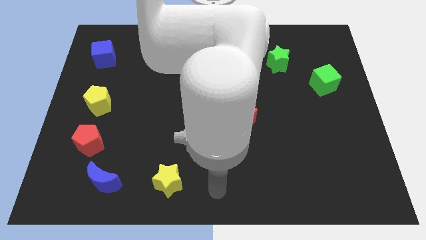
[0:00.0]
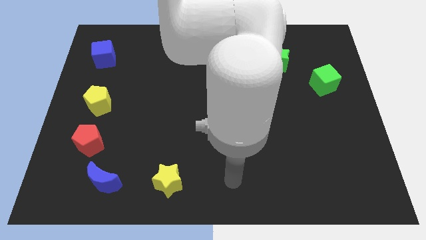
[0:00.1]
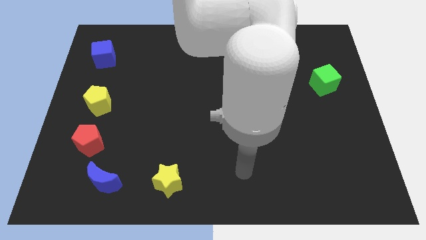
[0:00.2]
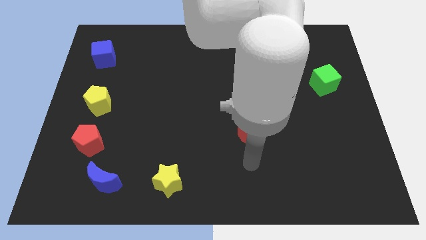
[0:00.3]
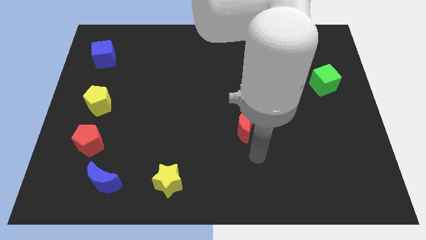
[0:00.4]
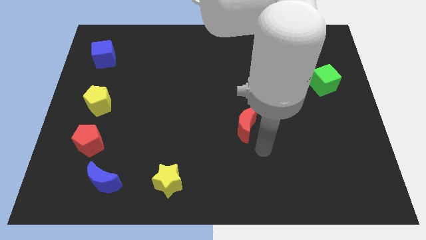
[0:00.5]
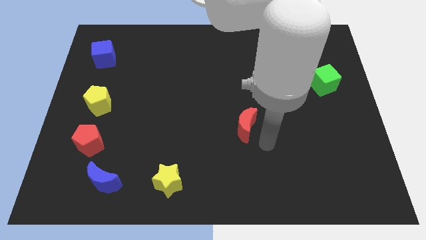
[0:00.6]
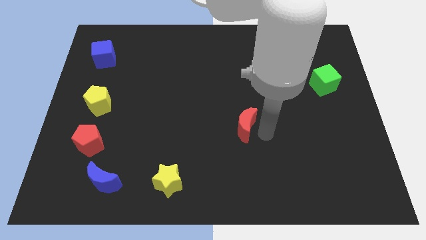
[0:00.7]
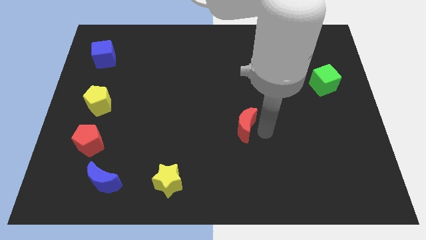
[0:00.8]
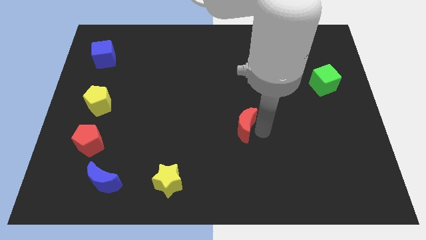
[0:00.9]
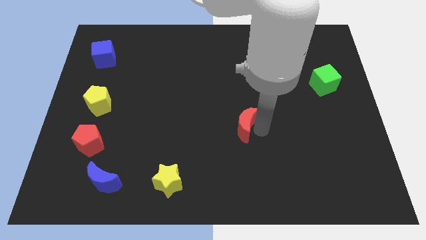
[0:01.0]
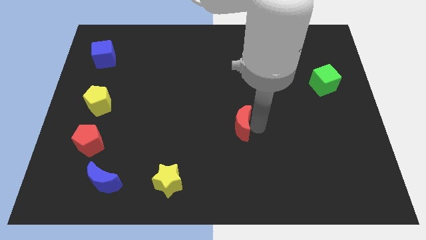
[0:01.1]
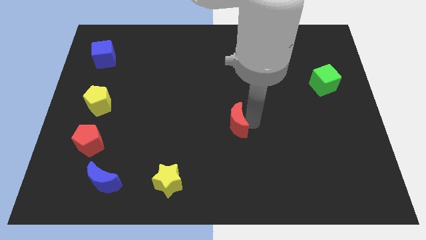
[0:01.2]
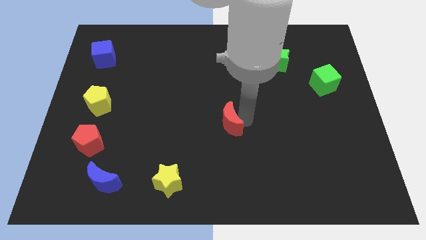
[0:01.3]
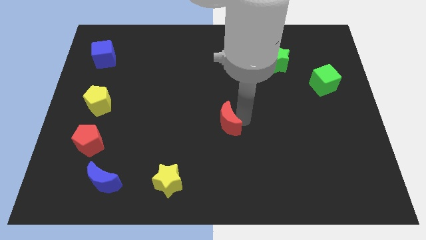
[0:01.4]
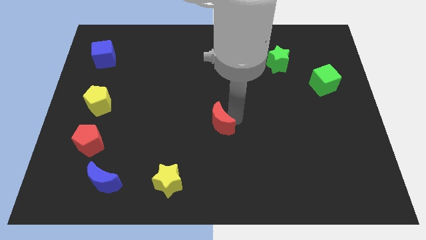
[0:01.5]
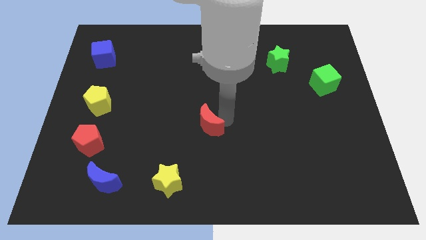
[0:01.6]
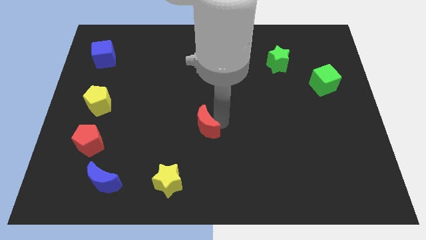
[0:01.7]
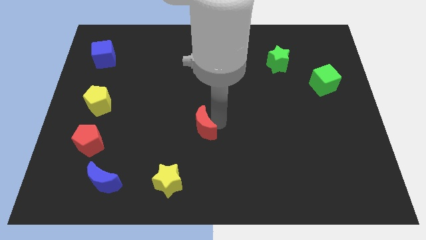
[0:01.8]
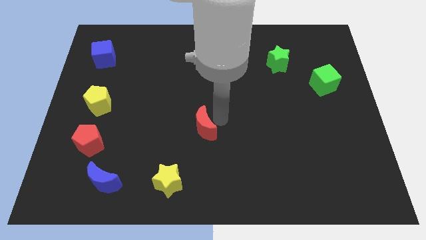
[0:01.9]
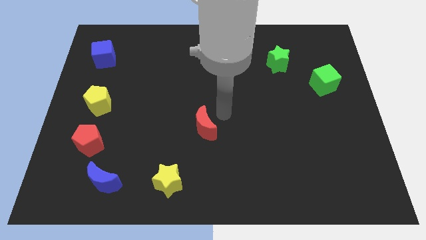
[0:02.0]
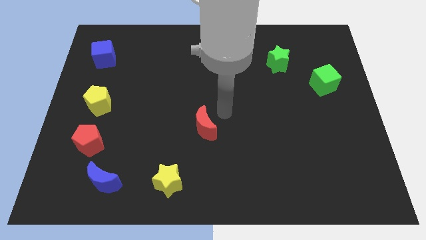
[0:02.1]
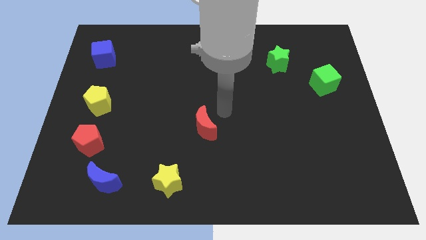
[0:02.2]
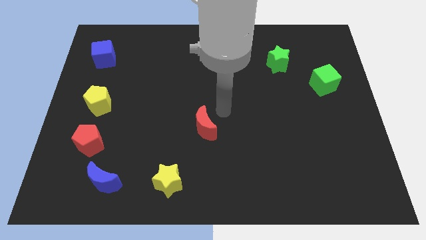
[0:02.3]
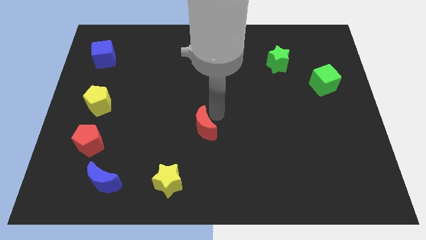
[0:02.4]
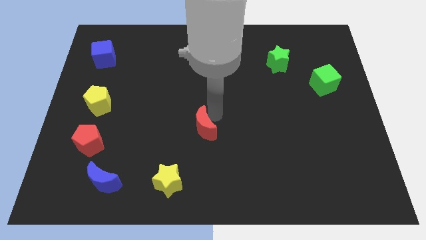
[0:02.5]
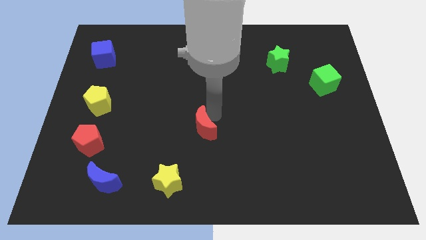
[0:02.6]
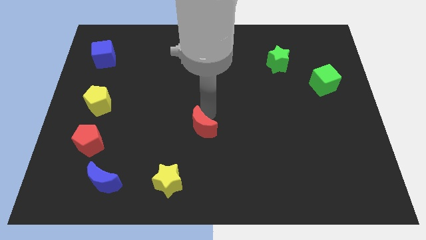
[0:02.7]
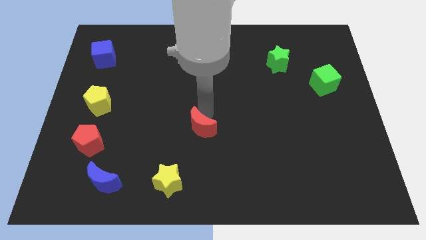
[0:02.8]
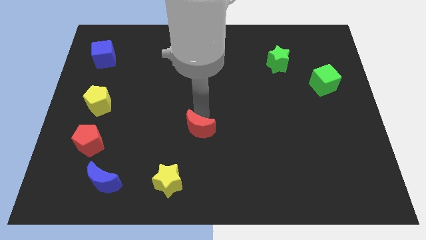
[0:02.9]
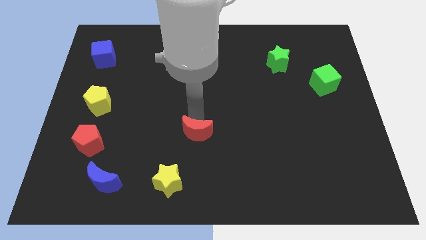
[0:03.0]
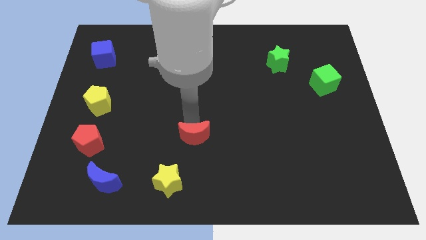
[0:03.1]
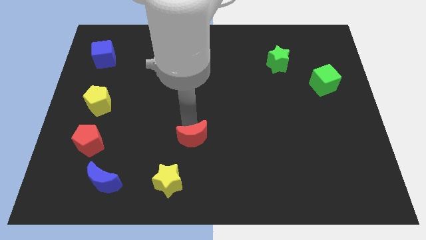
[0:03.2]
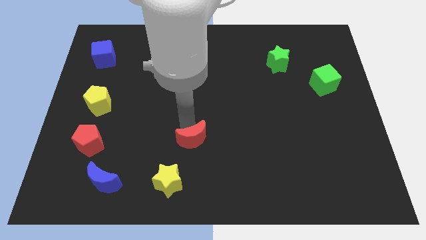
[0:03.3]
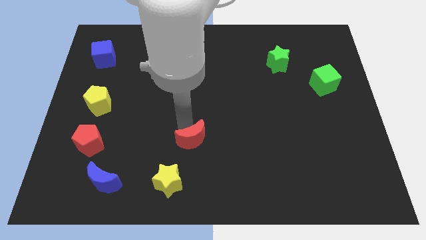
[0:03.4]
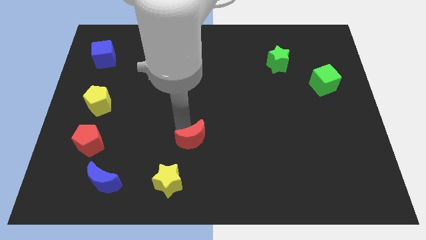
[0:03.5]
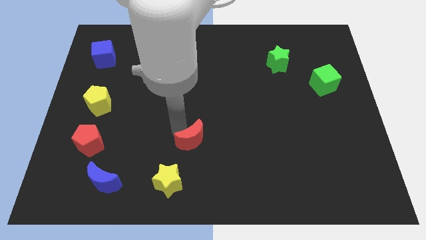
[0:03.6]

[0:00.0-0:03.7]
push the red crescent towards the bottom center of the board

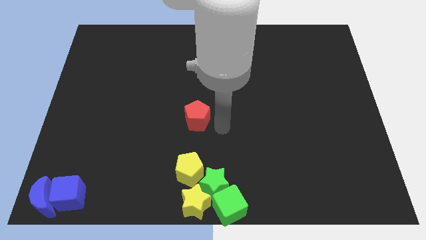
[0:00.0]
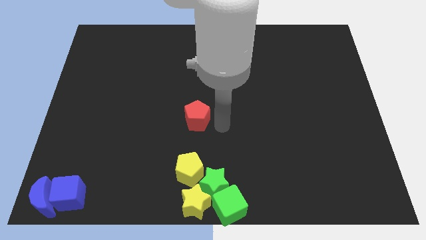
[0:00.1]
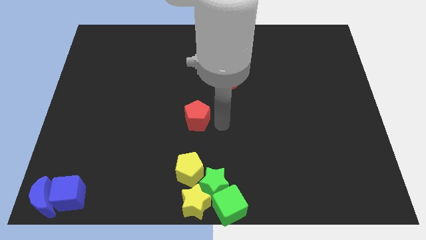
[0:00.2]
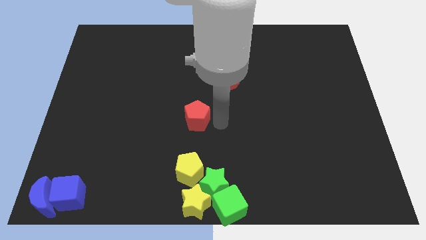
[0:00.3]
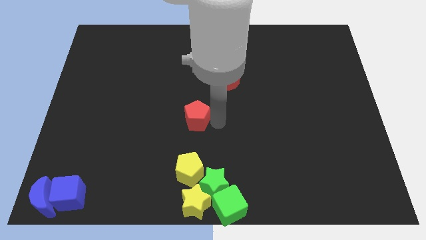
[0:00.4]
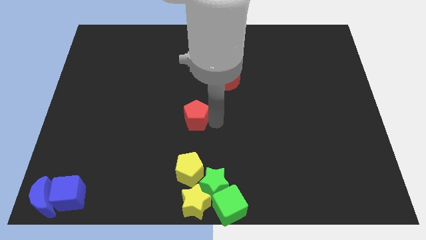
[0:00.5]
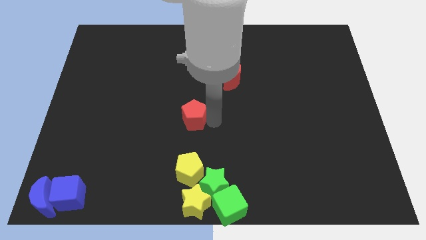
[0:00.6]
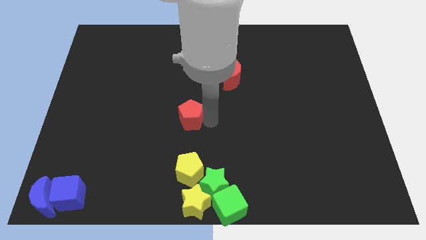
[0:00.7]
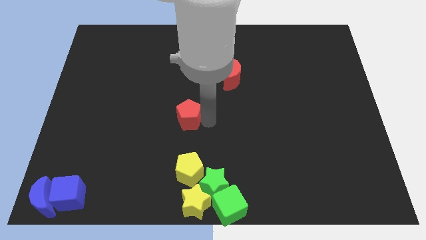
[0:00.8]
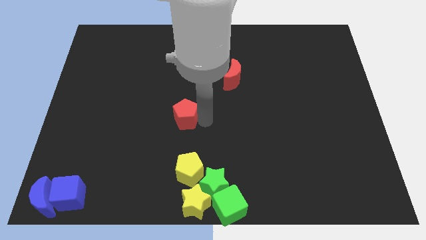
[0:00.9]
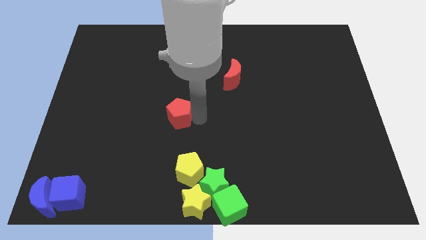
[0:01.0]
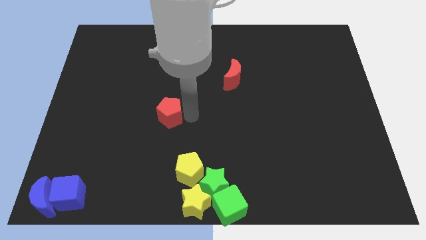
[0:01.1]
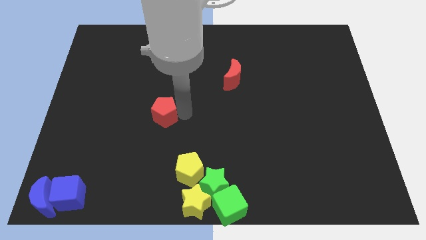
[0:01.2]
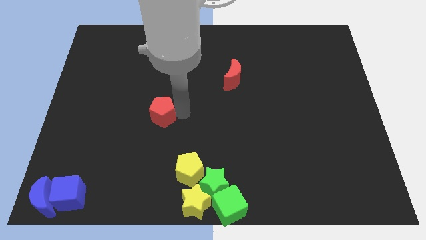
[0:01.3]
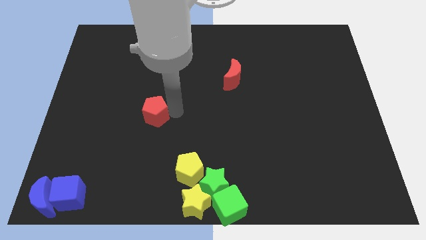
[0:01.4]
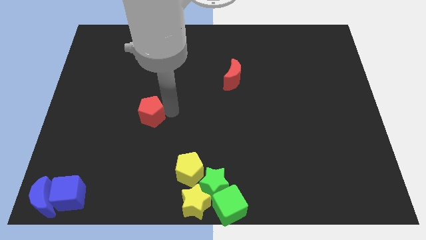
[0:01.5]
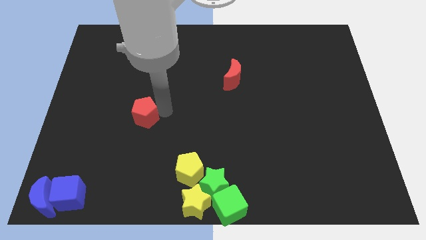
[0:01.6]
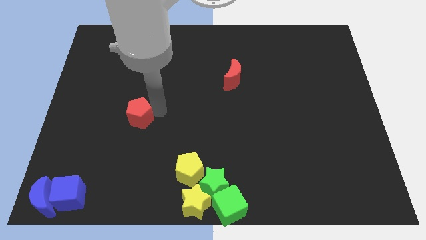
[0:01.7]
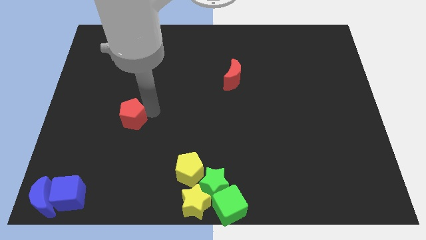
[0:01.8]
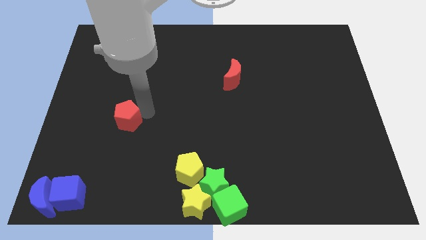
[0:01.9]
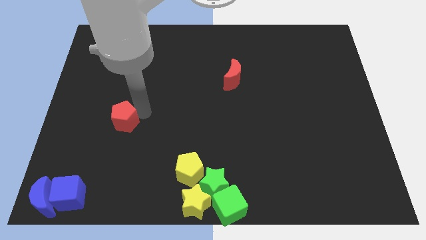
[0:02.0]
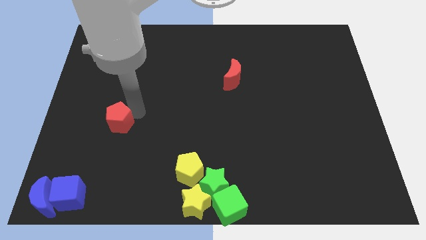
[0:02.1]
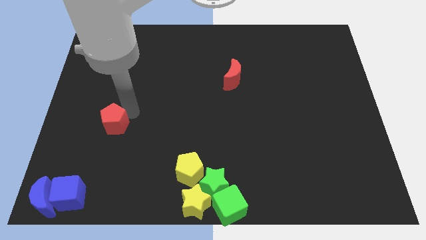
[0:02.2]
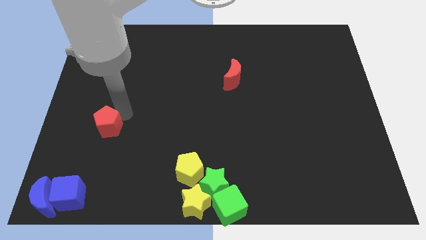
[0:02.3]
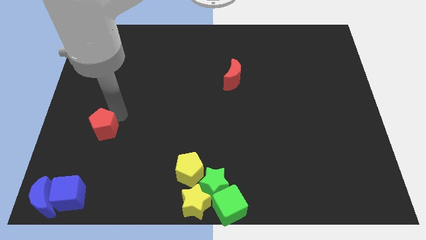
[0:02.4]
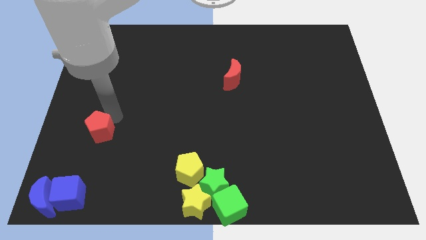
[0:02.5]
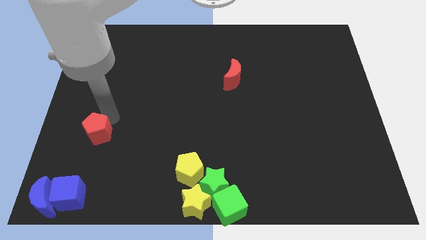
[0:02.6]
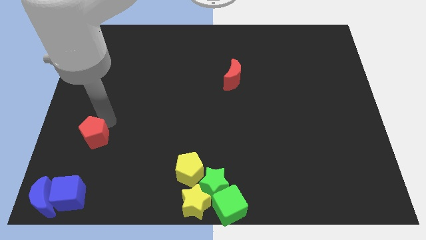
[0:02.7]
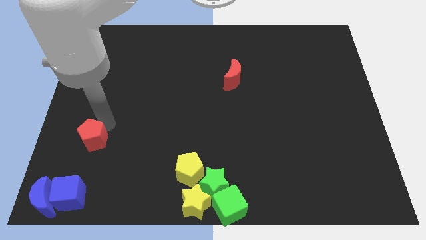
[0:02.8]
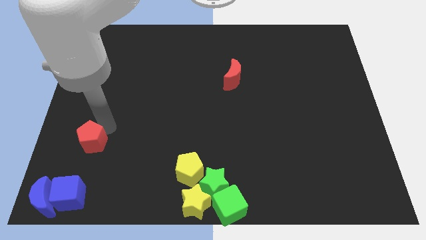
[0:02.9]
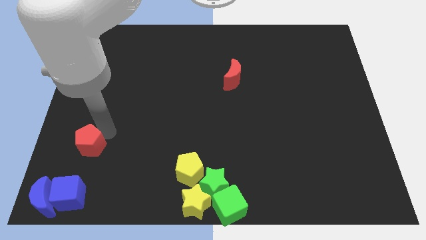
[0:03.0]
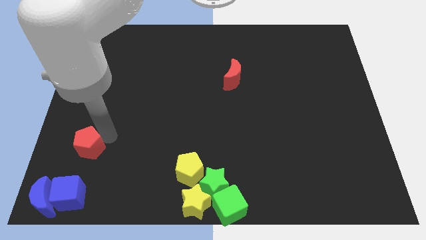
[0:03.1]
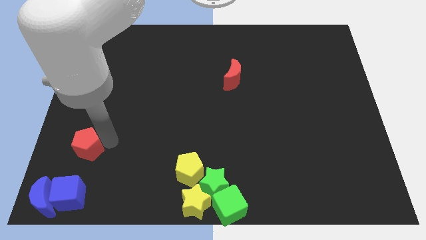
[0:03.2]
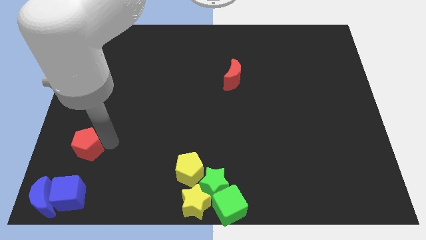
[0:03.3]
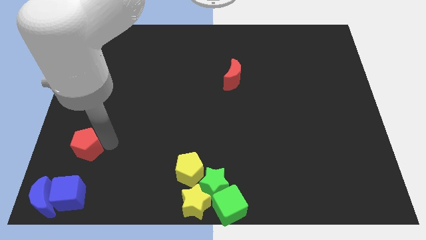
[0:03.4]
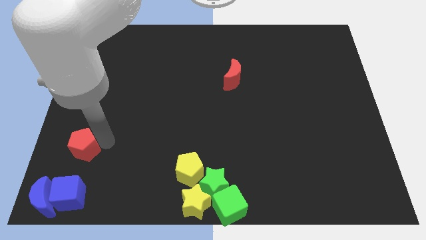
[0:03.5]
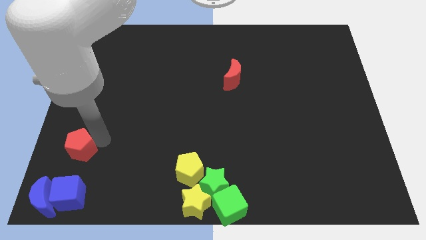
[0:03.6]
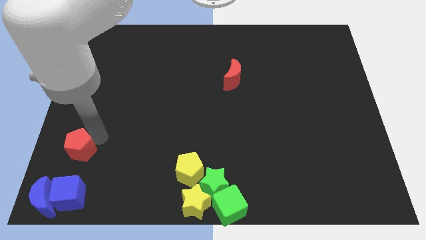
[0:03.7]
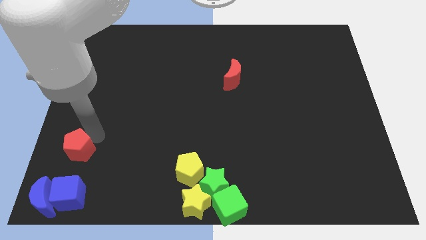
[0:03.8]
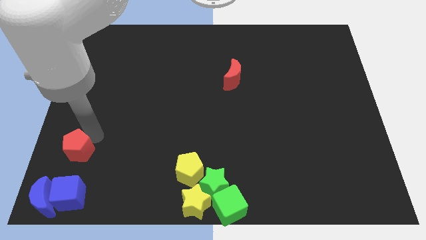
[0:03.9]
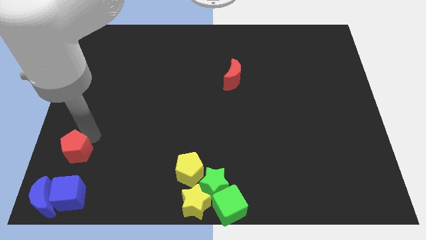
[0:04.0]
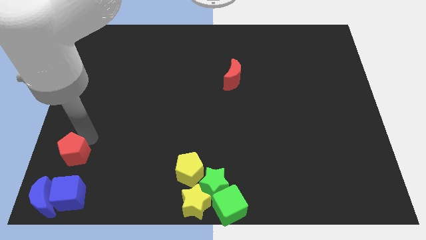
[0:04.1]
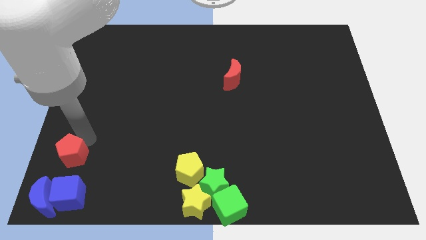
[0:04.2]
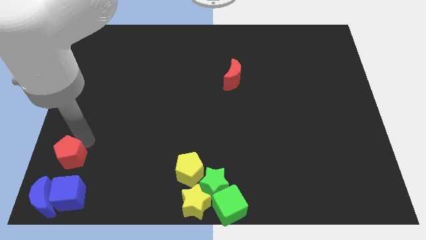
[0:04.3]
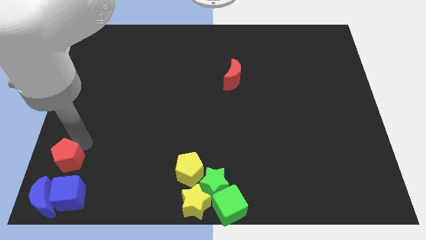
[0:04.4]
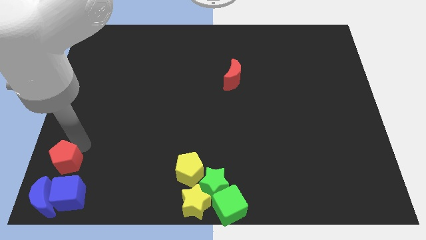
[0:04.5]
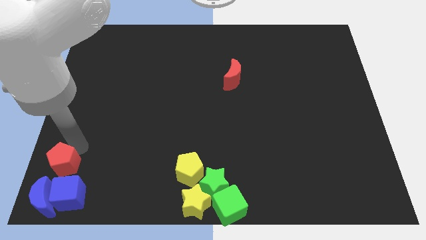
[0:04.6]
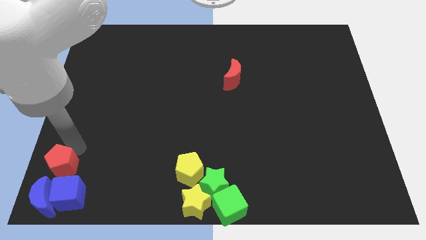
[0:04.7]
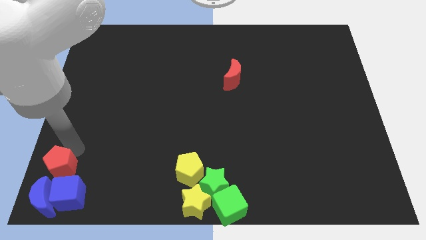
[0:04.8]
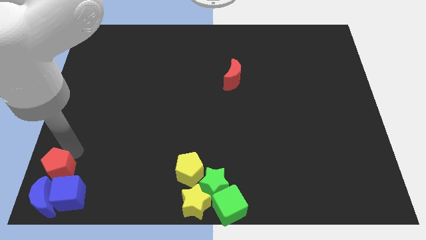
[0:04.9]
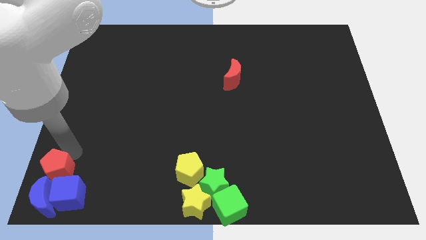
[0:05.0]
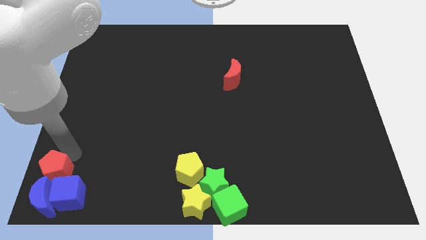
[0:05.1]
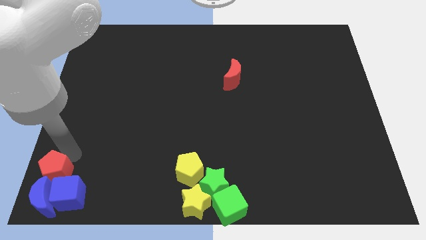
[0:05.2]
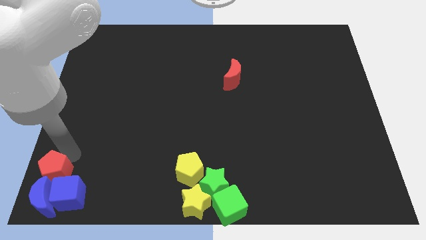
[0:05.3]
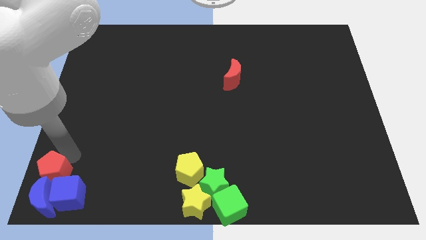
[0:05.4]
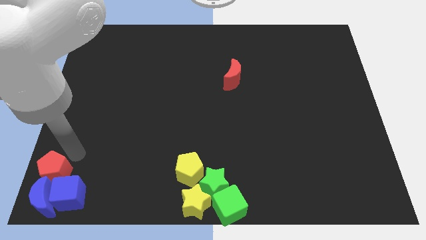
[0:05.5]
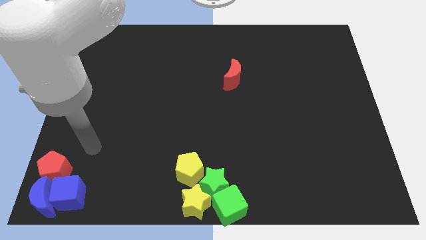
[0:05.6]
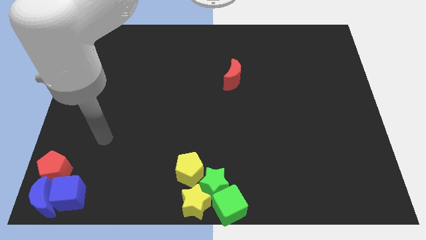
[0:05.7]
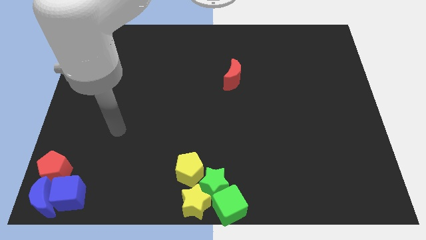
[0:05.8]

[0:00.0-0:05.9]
push the red pentagon towards the blue crescent
